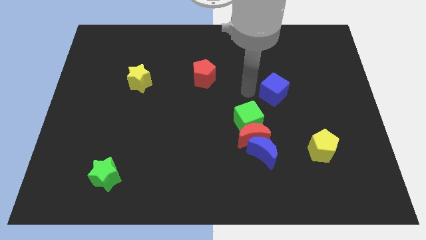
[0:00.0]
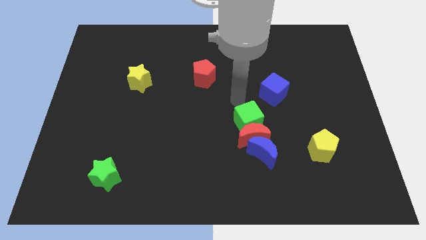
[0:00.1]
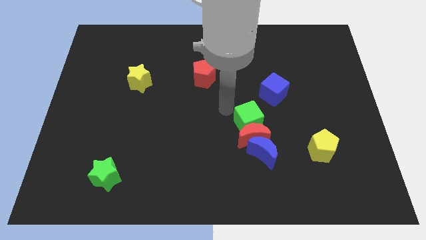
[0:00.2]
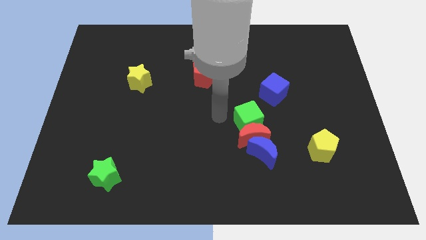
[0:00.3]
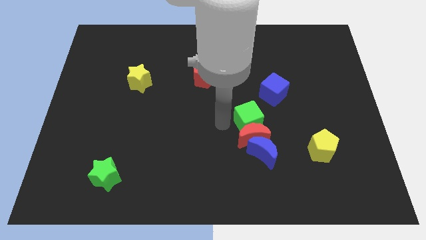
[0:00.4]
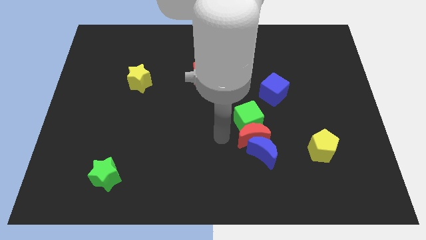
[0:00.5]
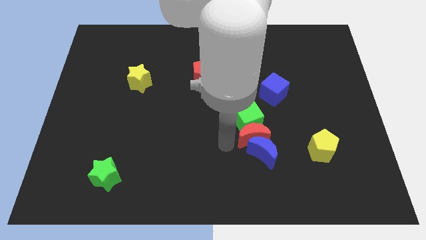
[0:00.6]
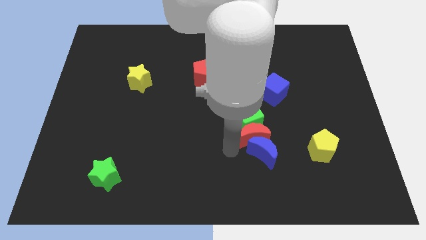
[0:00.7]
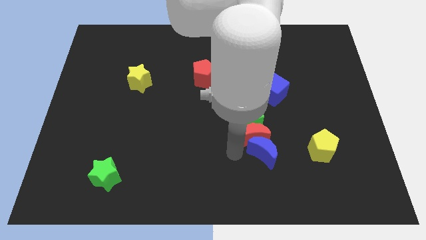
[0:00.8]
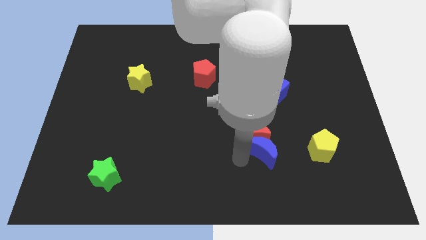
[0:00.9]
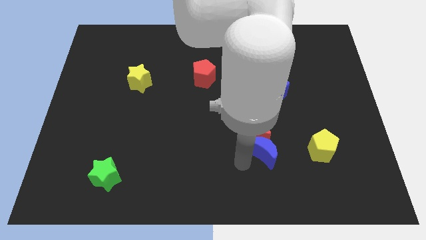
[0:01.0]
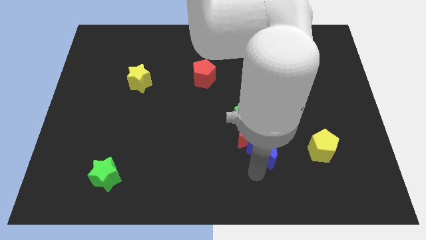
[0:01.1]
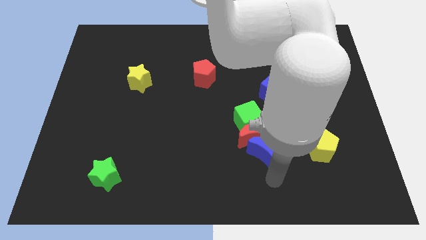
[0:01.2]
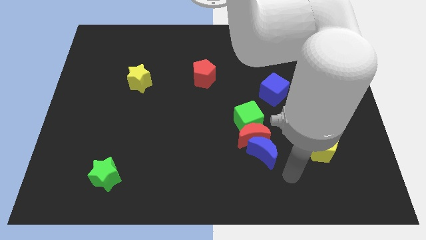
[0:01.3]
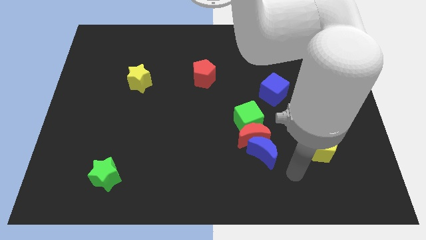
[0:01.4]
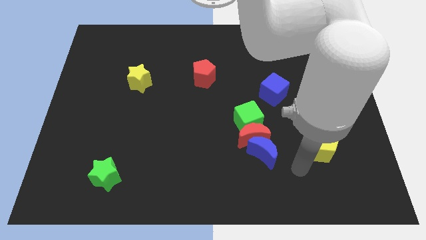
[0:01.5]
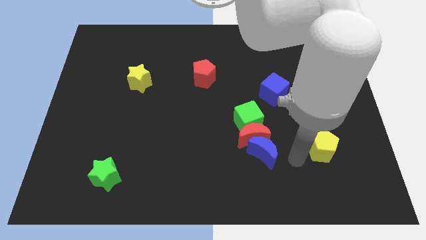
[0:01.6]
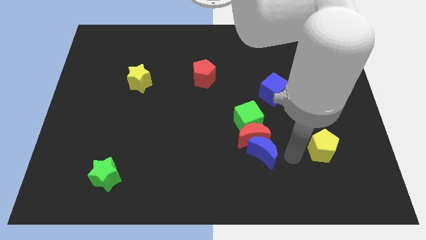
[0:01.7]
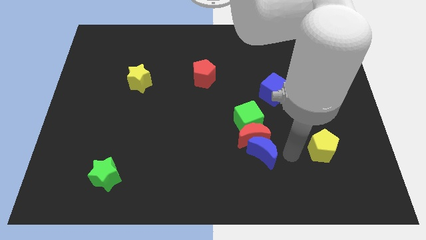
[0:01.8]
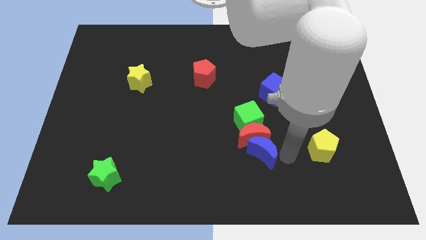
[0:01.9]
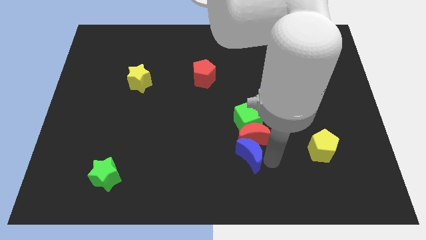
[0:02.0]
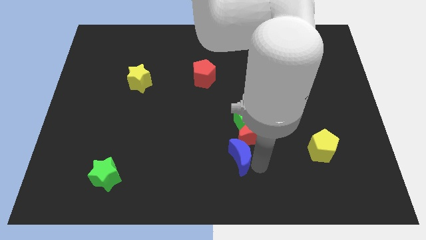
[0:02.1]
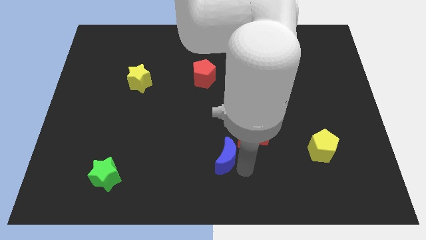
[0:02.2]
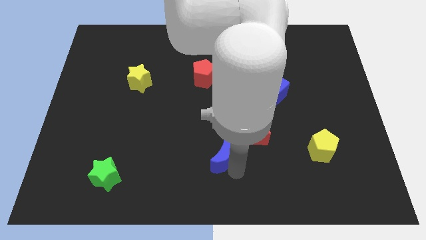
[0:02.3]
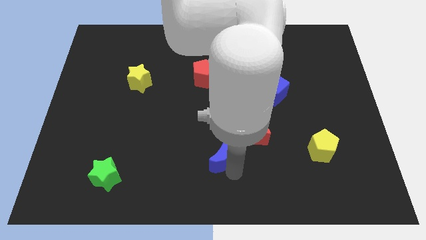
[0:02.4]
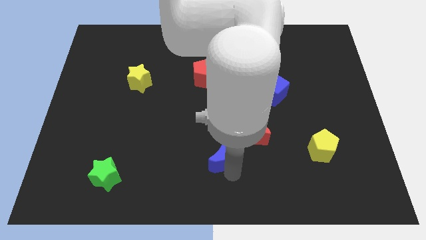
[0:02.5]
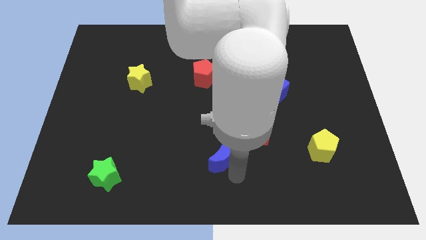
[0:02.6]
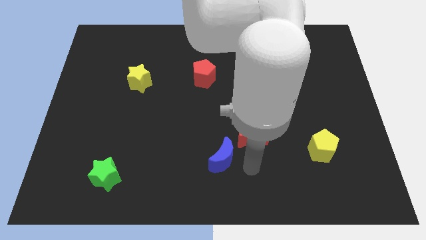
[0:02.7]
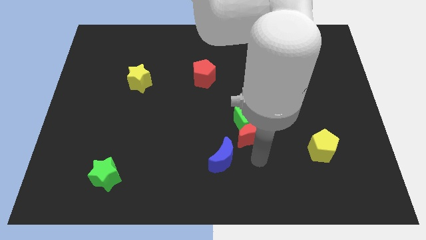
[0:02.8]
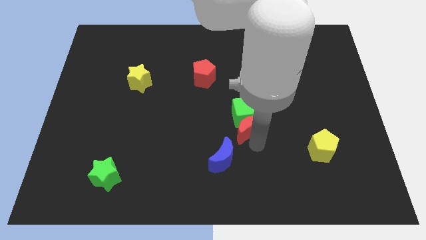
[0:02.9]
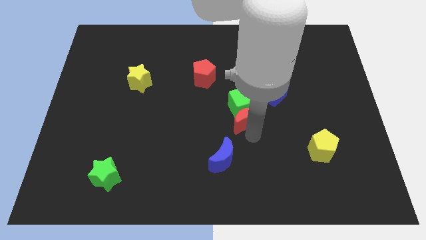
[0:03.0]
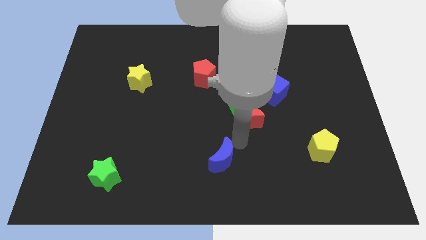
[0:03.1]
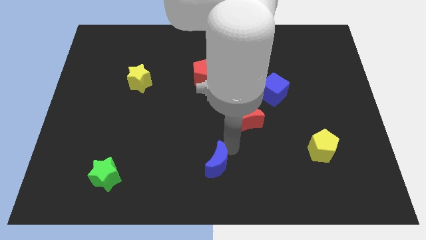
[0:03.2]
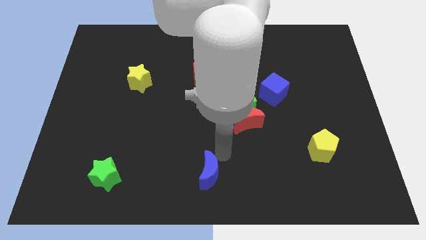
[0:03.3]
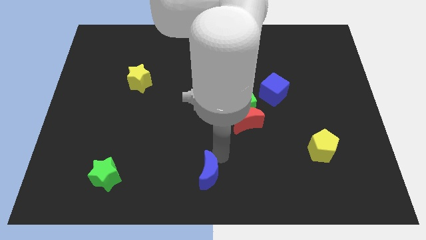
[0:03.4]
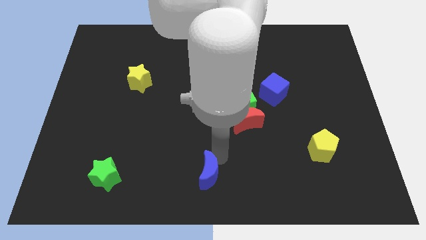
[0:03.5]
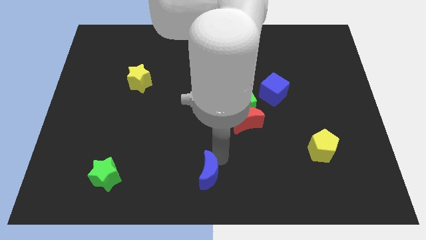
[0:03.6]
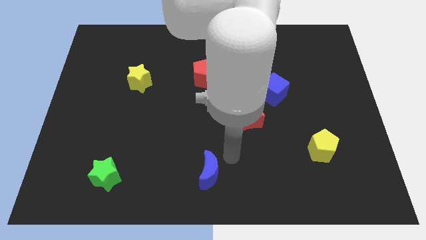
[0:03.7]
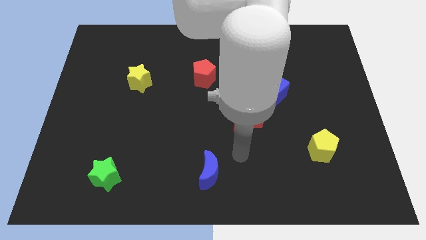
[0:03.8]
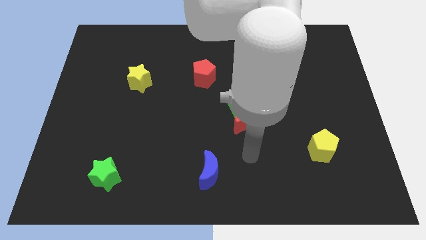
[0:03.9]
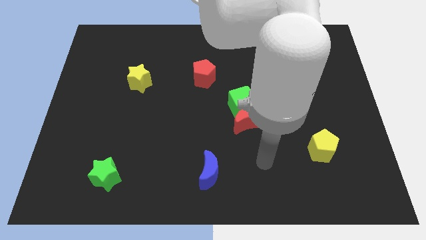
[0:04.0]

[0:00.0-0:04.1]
place the blue moon right to the green star

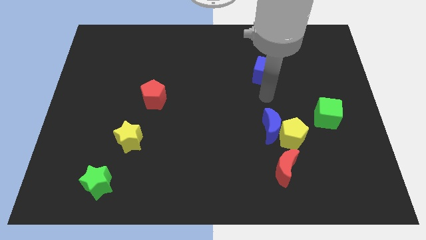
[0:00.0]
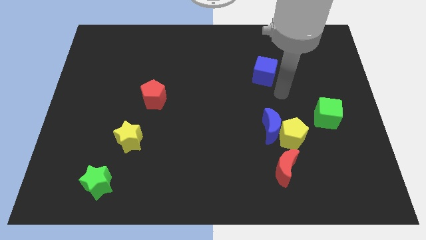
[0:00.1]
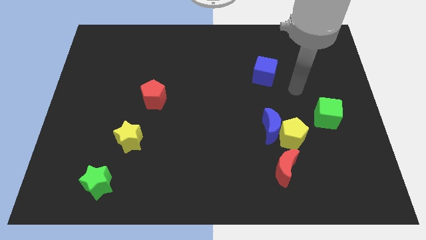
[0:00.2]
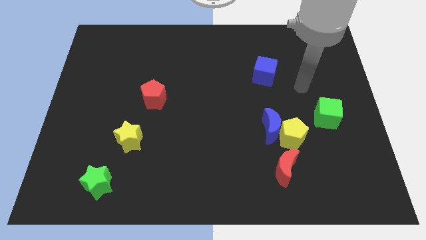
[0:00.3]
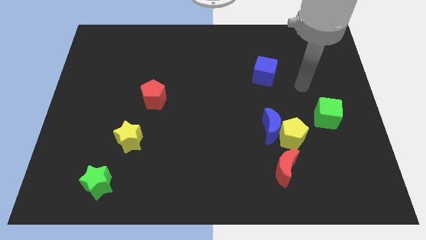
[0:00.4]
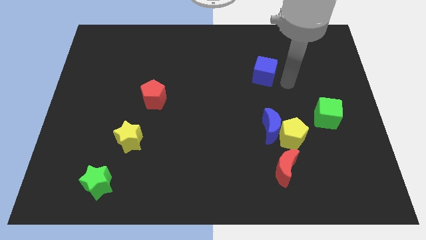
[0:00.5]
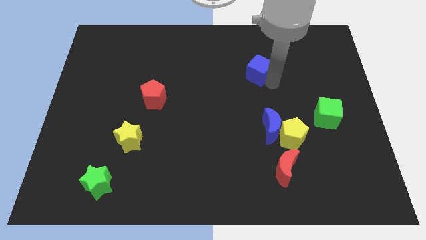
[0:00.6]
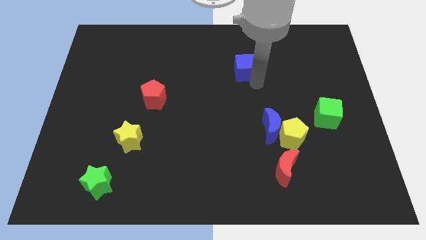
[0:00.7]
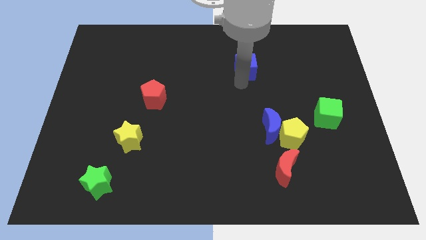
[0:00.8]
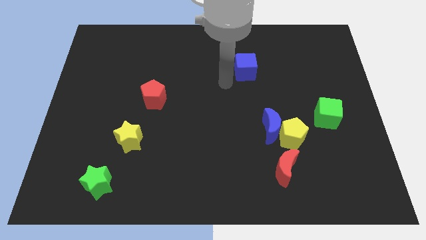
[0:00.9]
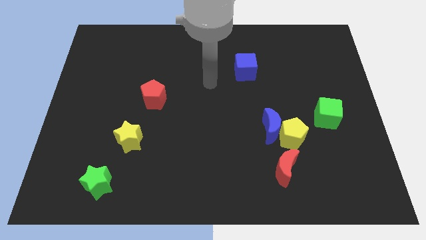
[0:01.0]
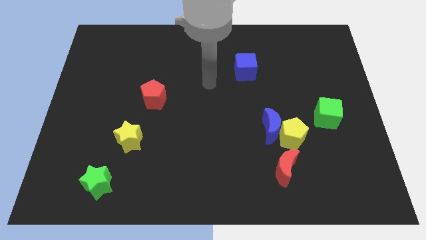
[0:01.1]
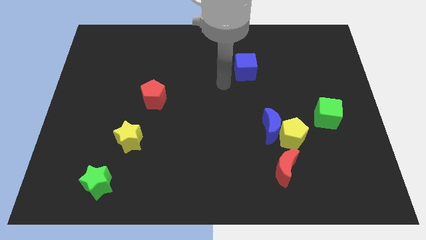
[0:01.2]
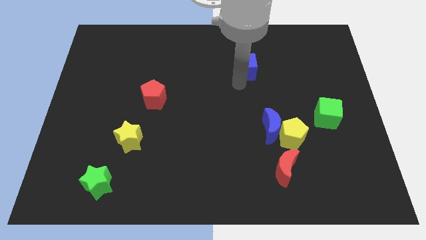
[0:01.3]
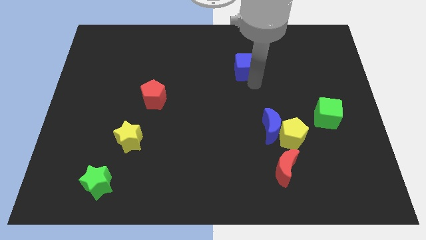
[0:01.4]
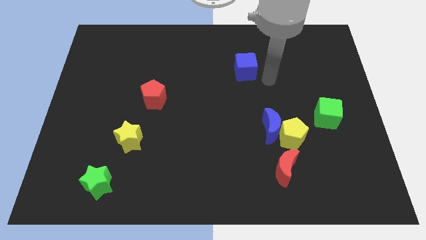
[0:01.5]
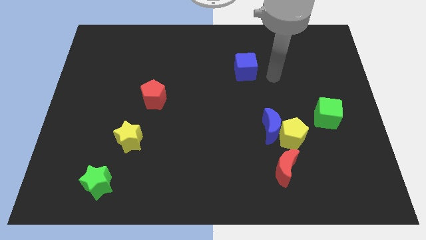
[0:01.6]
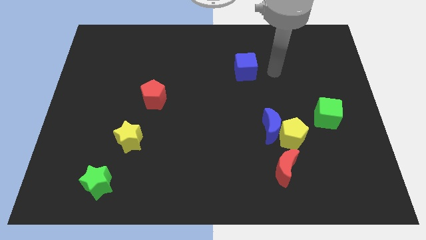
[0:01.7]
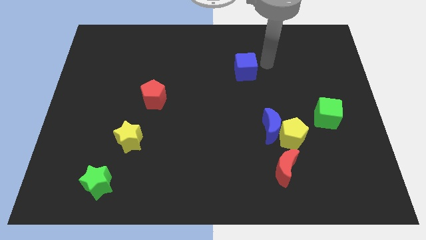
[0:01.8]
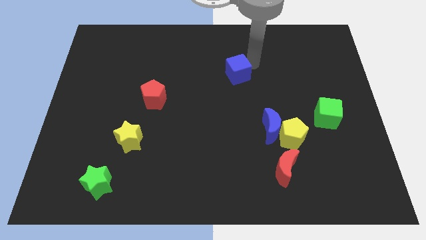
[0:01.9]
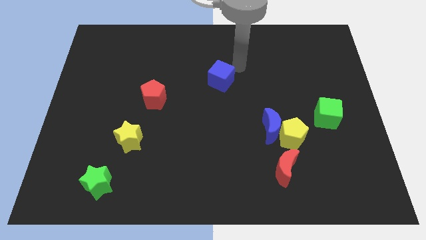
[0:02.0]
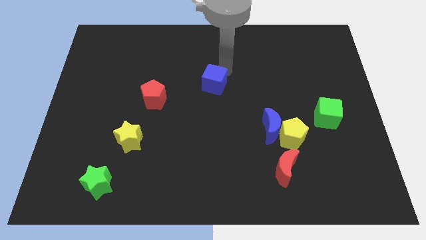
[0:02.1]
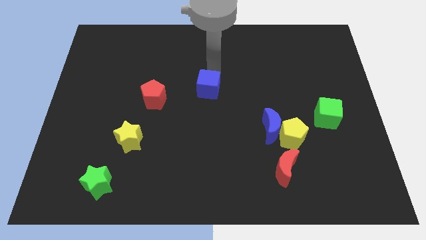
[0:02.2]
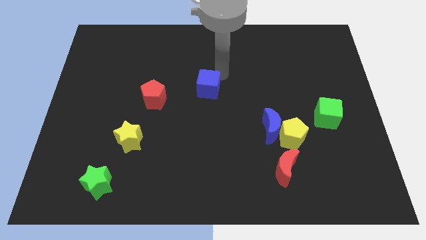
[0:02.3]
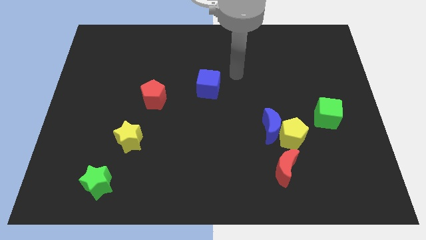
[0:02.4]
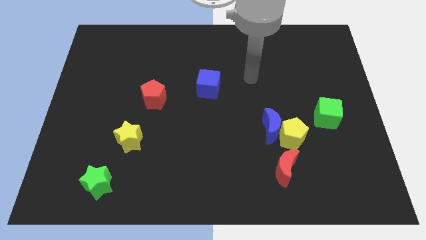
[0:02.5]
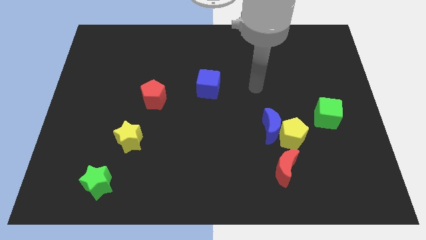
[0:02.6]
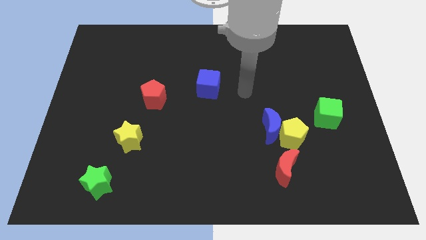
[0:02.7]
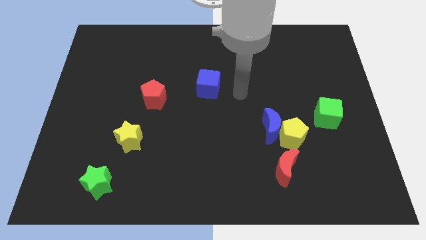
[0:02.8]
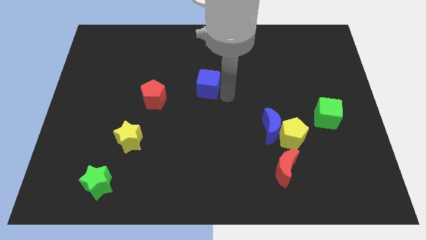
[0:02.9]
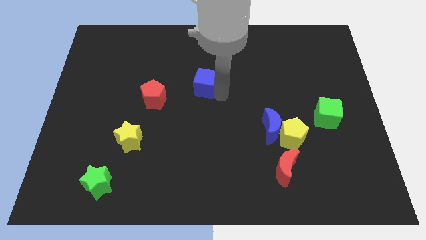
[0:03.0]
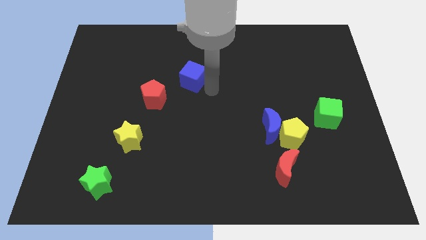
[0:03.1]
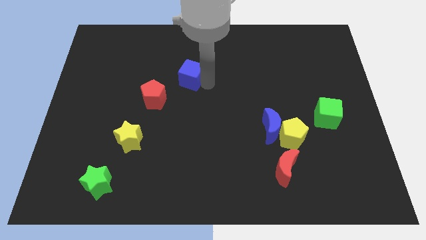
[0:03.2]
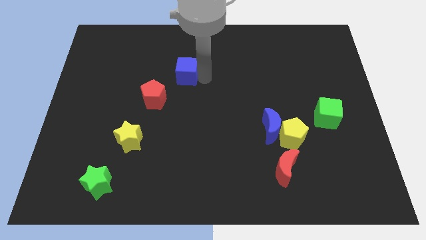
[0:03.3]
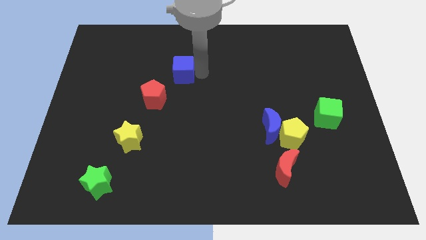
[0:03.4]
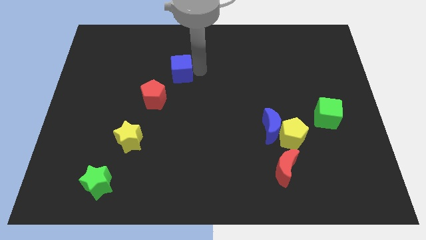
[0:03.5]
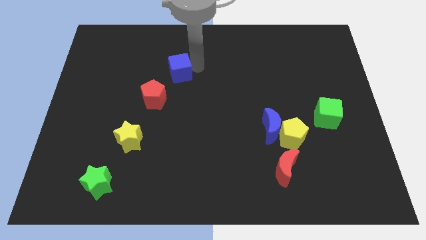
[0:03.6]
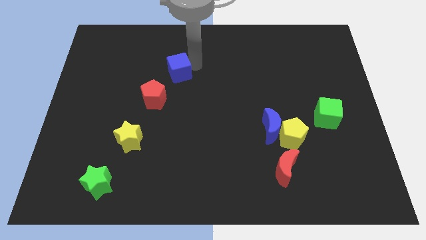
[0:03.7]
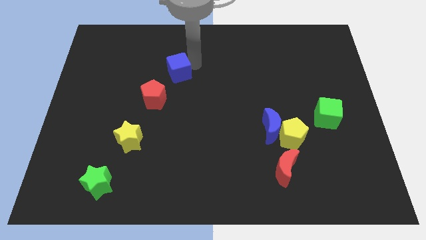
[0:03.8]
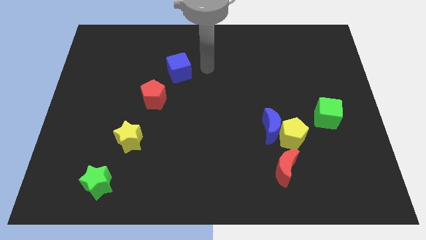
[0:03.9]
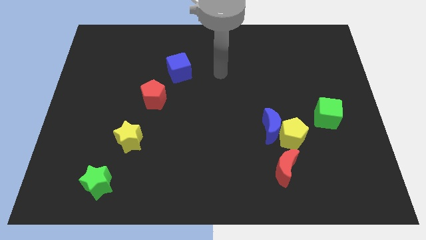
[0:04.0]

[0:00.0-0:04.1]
push the blue cube diagonally to the right of the red pentagon

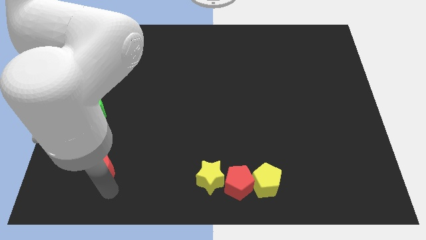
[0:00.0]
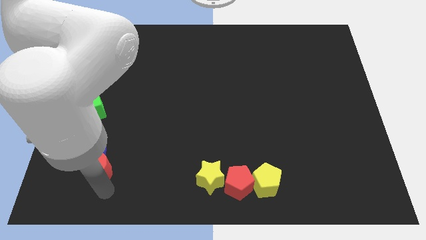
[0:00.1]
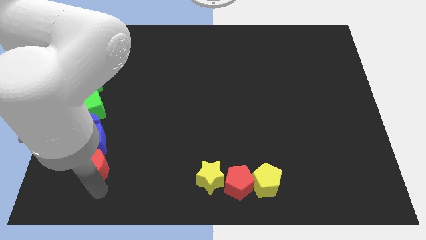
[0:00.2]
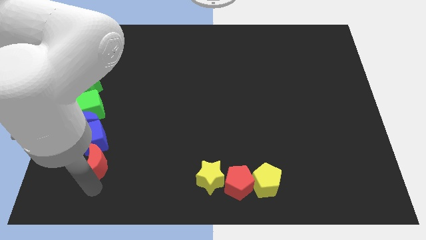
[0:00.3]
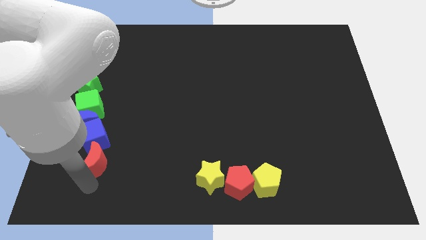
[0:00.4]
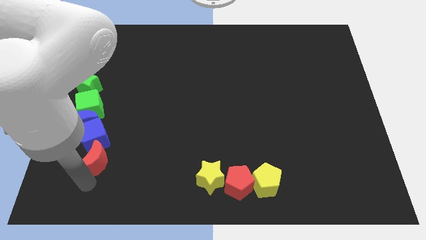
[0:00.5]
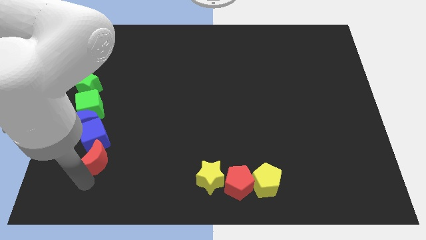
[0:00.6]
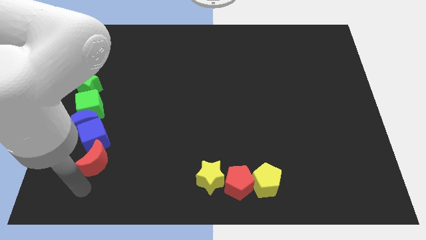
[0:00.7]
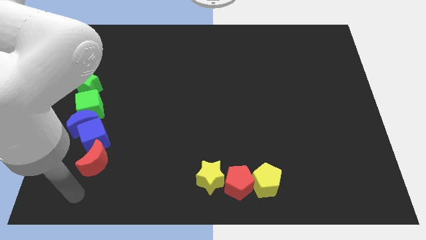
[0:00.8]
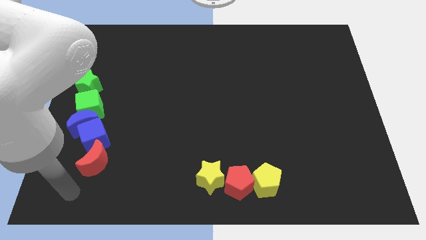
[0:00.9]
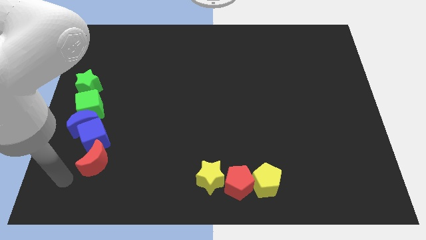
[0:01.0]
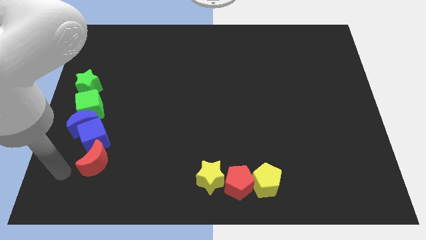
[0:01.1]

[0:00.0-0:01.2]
move the red crescent below the blue cube
